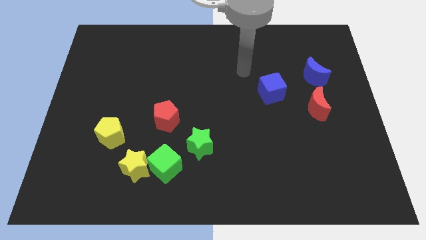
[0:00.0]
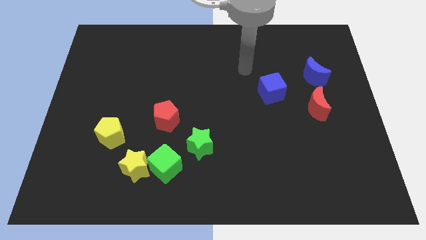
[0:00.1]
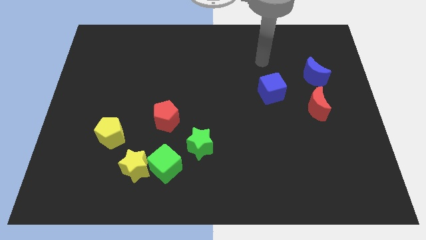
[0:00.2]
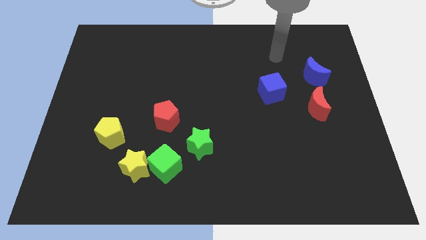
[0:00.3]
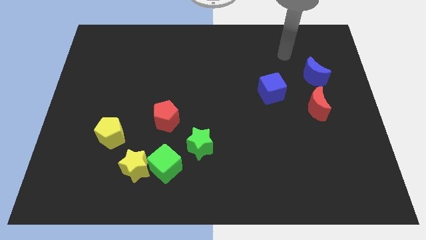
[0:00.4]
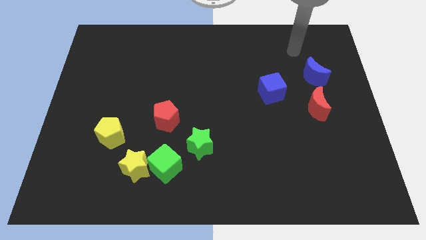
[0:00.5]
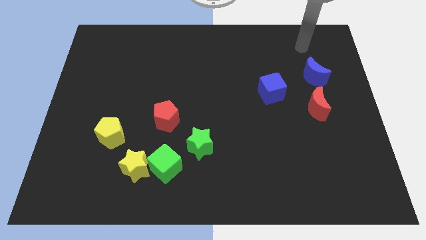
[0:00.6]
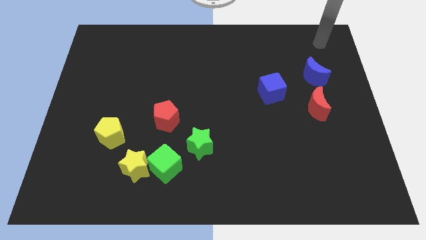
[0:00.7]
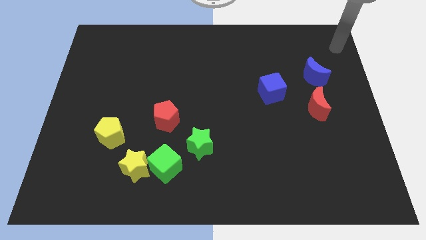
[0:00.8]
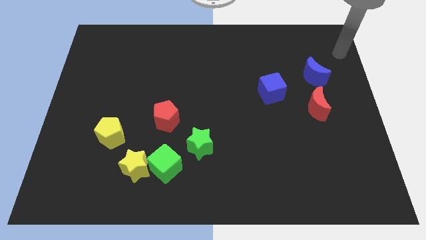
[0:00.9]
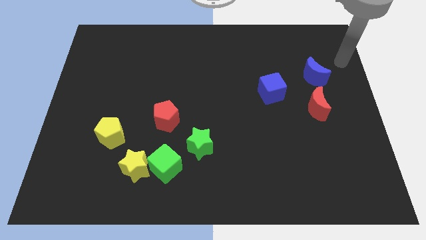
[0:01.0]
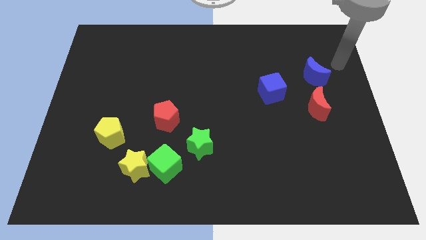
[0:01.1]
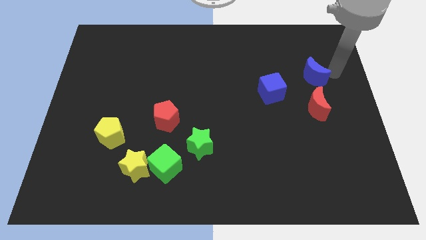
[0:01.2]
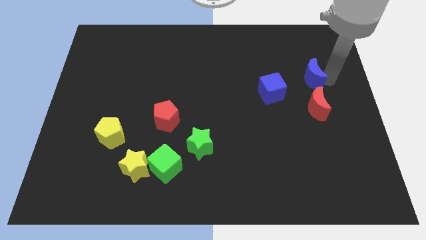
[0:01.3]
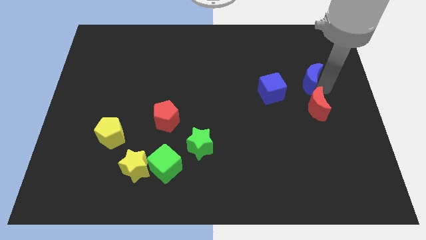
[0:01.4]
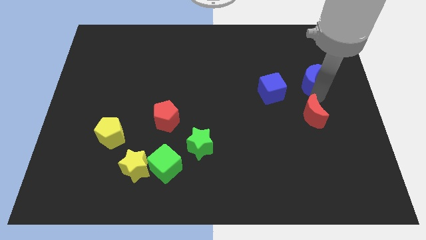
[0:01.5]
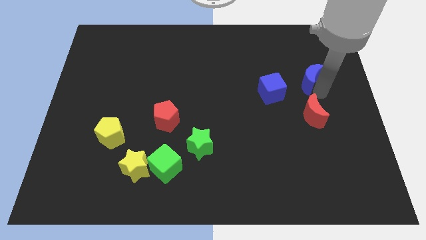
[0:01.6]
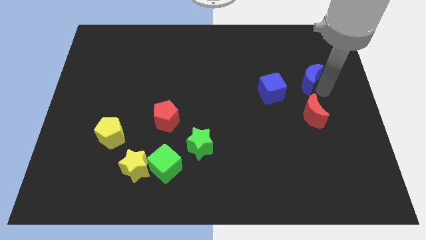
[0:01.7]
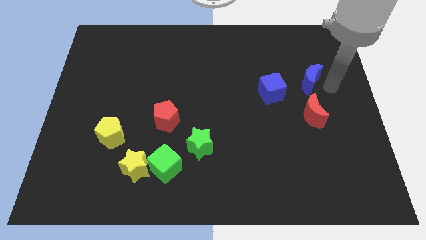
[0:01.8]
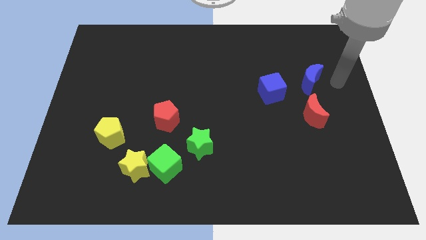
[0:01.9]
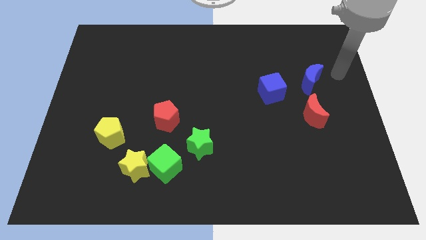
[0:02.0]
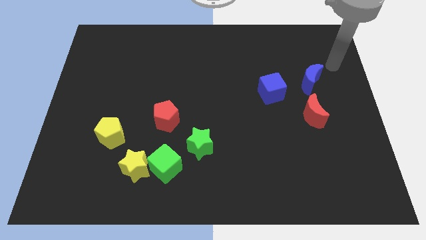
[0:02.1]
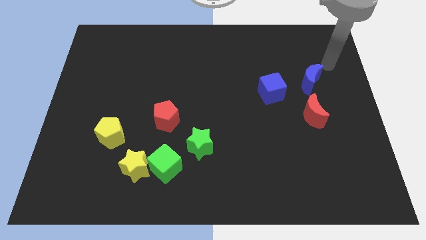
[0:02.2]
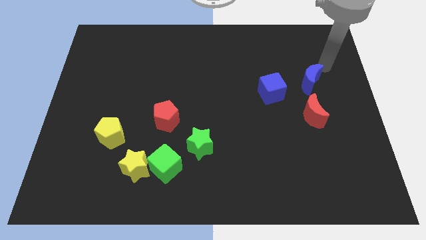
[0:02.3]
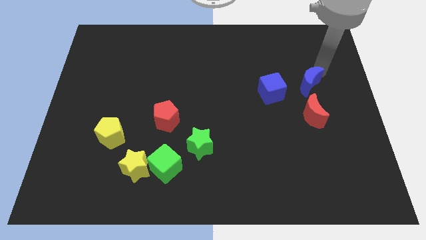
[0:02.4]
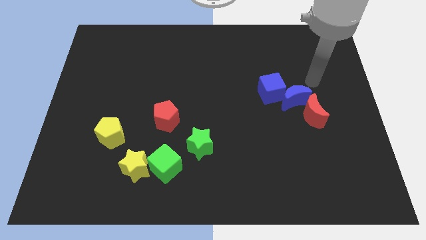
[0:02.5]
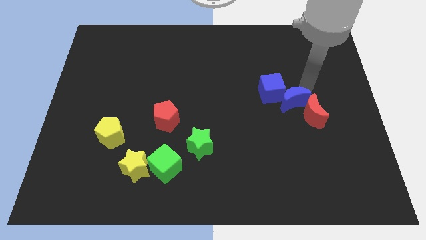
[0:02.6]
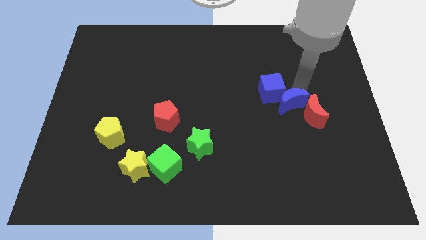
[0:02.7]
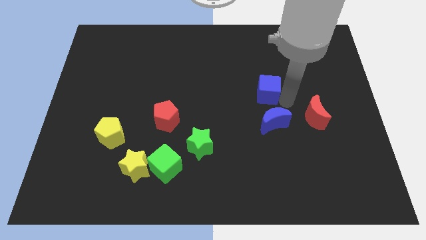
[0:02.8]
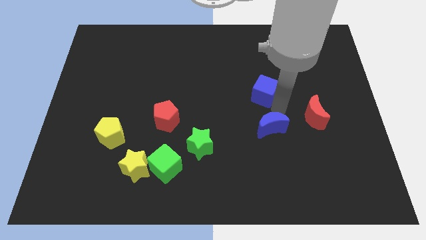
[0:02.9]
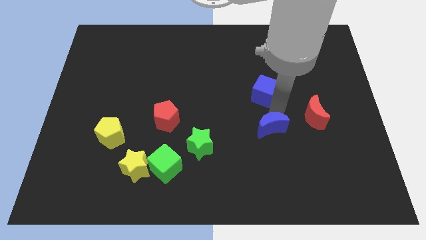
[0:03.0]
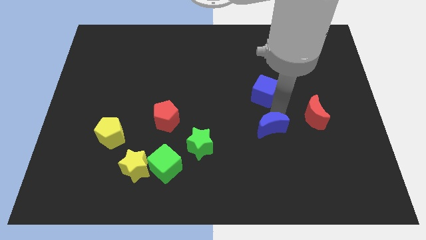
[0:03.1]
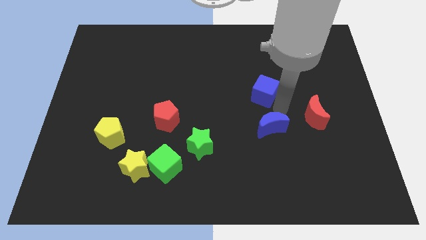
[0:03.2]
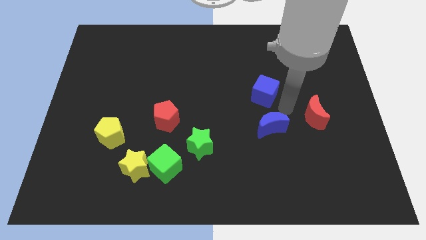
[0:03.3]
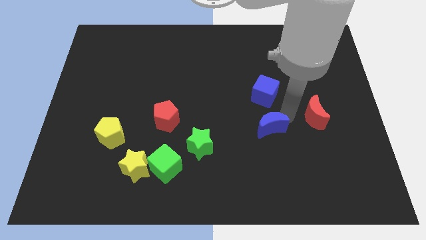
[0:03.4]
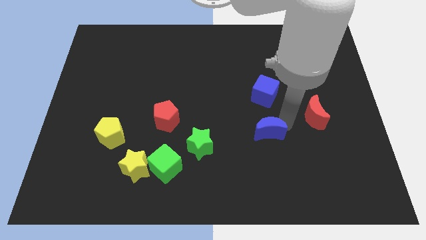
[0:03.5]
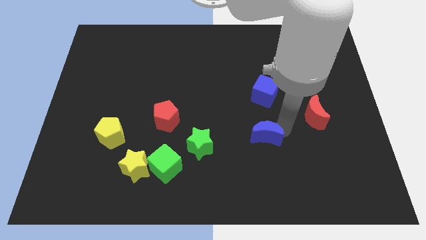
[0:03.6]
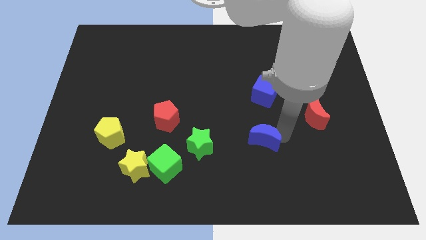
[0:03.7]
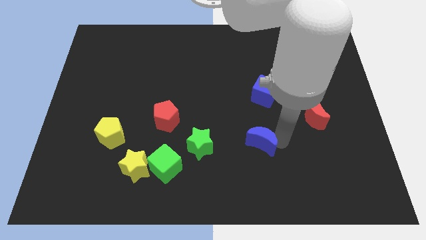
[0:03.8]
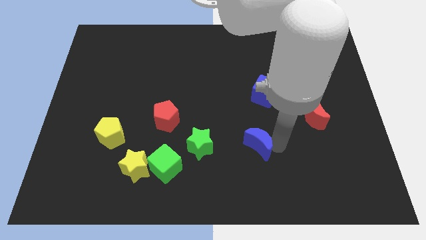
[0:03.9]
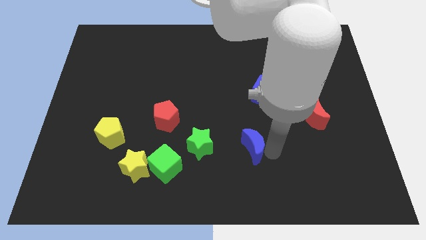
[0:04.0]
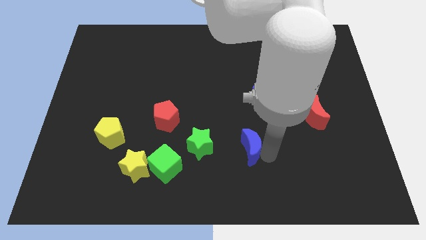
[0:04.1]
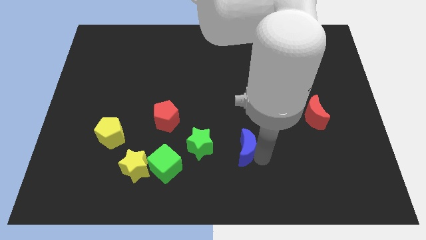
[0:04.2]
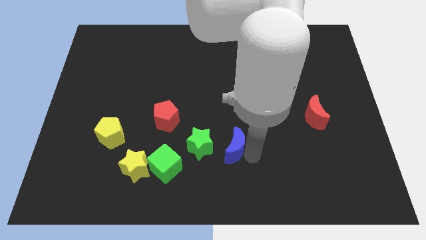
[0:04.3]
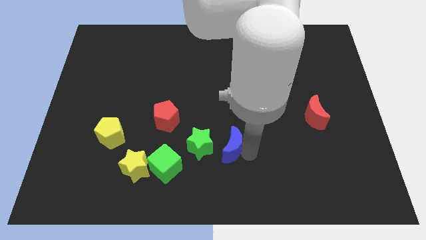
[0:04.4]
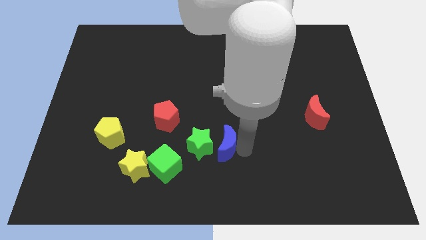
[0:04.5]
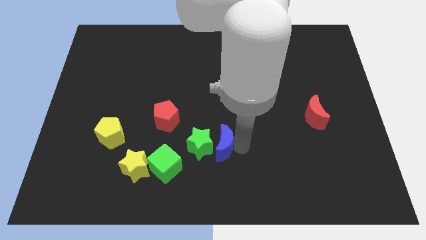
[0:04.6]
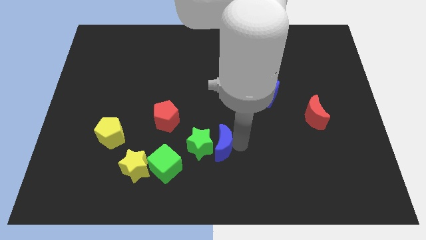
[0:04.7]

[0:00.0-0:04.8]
put the blue moon next to the green star

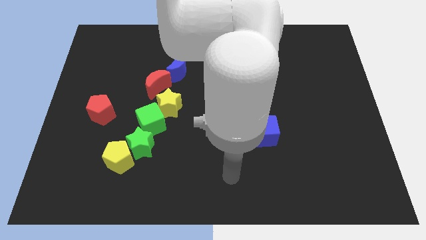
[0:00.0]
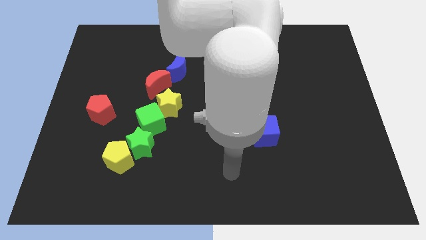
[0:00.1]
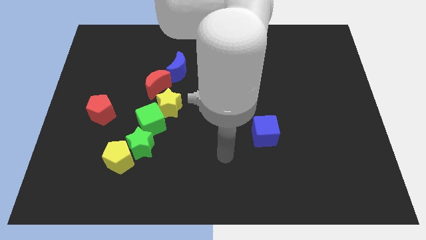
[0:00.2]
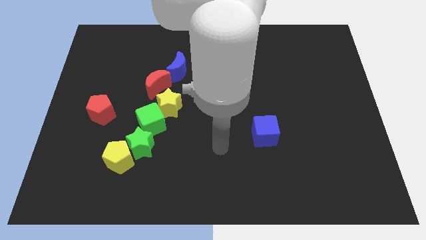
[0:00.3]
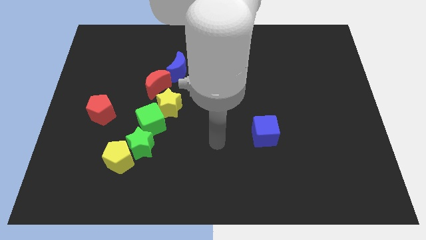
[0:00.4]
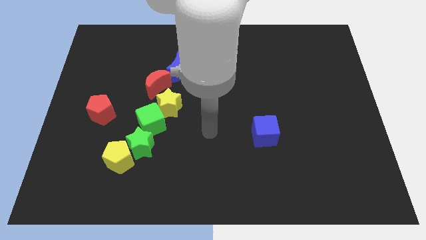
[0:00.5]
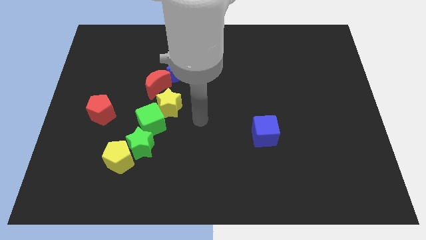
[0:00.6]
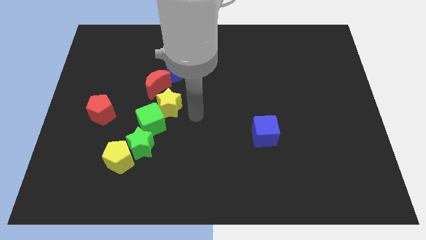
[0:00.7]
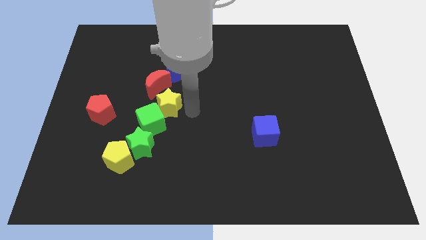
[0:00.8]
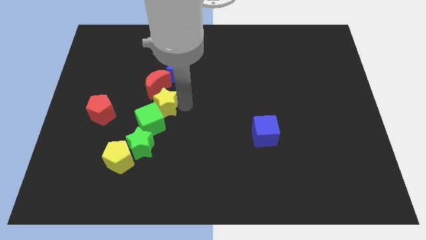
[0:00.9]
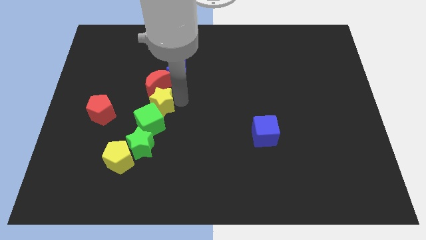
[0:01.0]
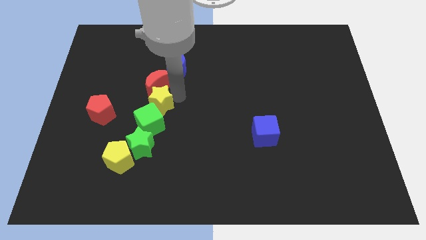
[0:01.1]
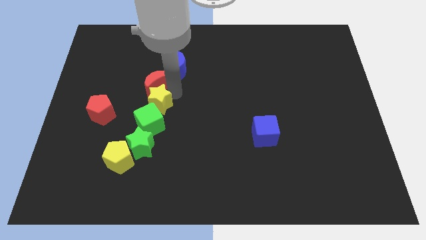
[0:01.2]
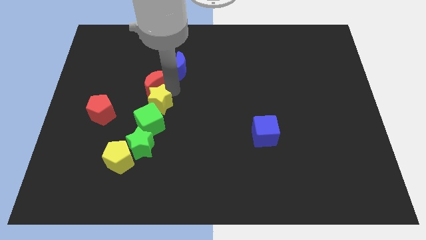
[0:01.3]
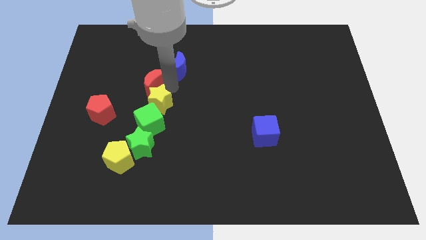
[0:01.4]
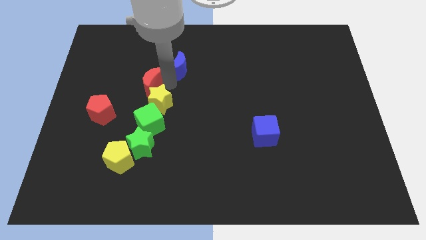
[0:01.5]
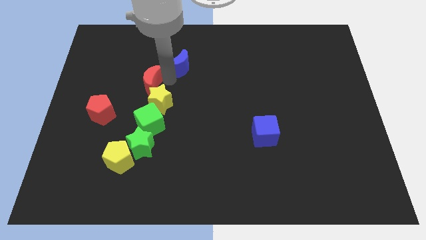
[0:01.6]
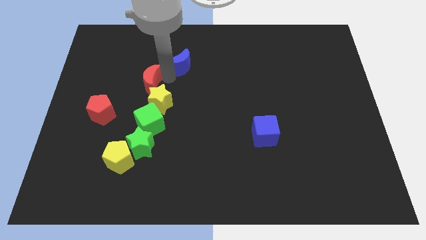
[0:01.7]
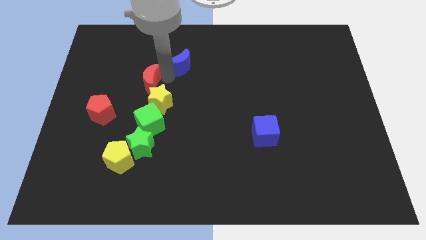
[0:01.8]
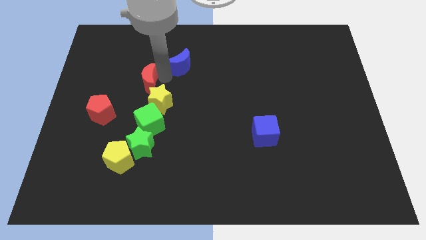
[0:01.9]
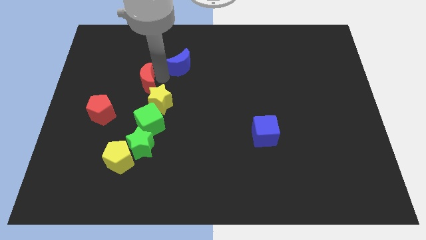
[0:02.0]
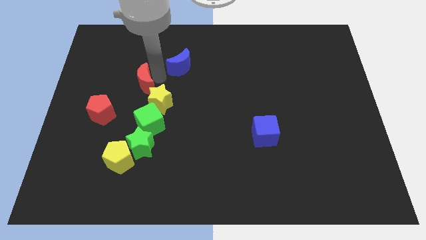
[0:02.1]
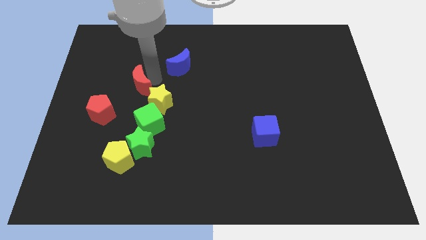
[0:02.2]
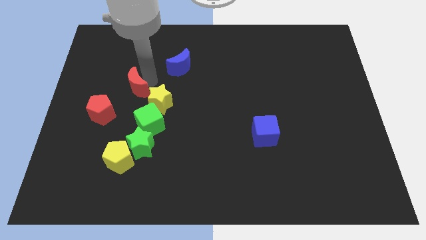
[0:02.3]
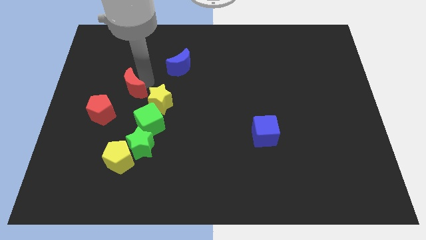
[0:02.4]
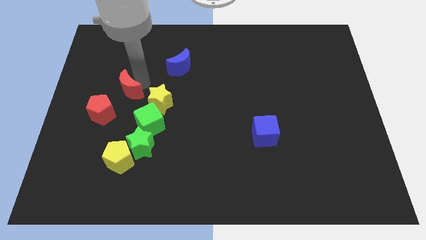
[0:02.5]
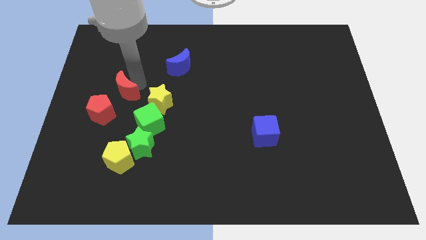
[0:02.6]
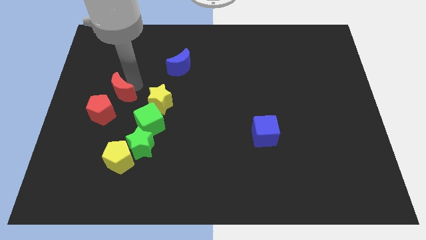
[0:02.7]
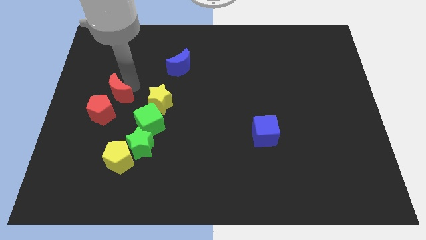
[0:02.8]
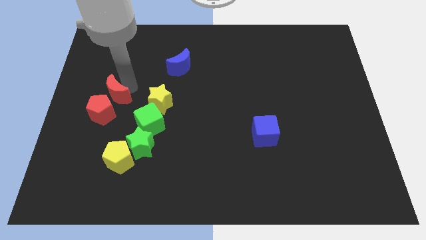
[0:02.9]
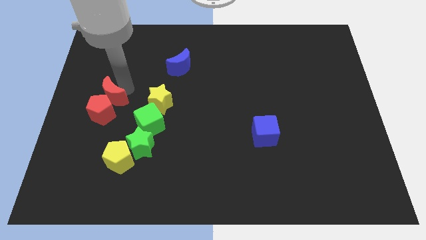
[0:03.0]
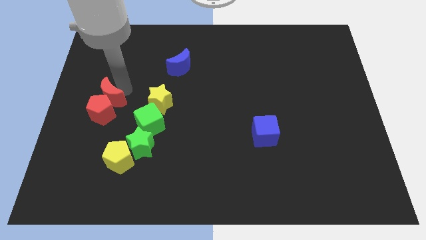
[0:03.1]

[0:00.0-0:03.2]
slide the red moon next to the red pentagon

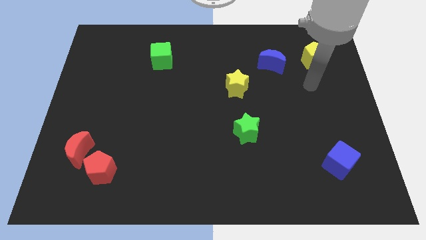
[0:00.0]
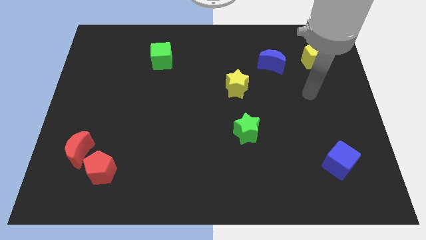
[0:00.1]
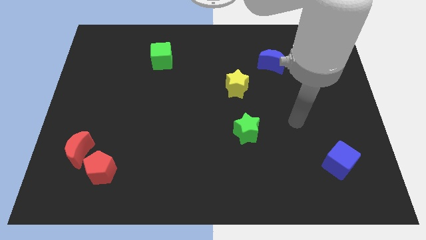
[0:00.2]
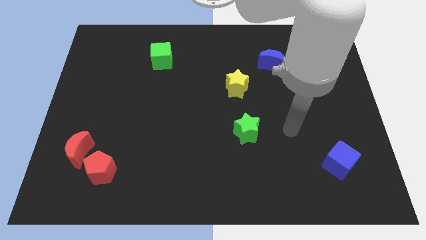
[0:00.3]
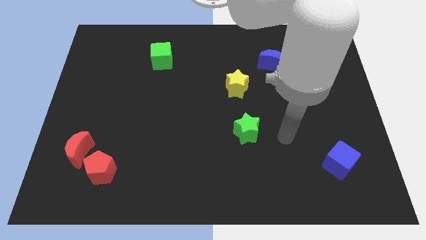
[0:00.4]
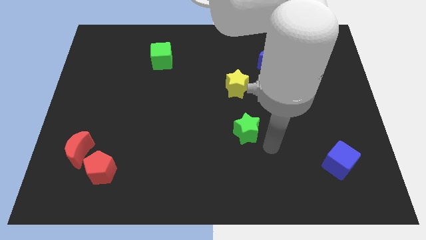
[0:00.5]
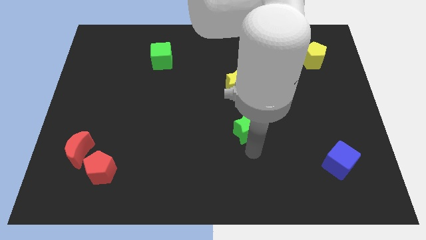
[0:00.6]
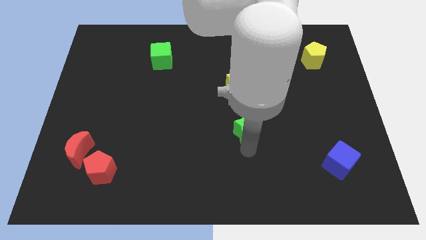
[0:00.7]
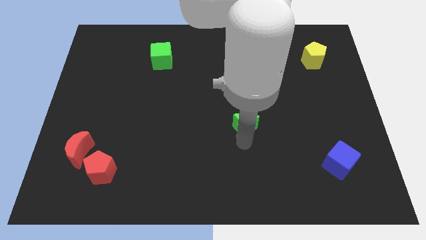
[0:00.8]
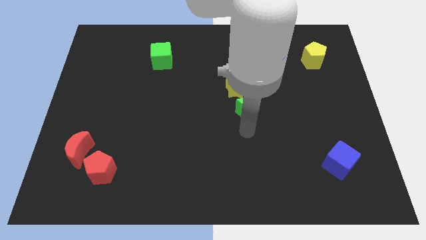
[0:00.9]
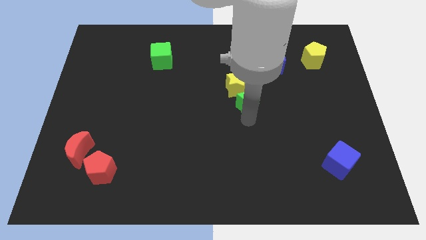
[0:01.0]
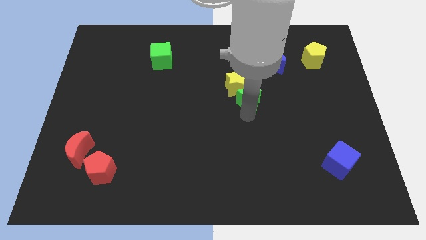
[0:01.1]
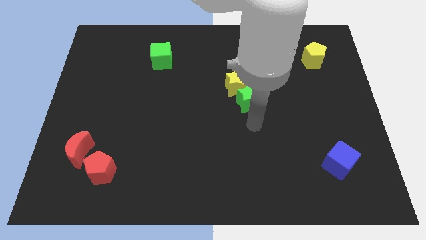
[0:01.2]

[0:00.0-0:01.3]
put the green star towards the yellow star
